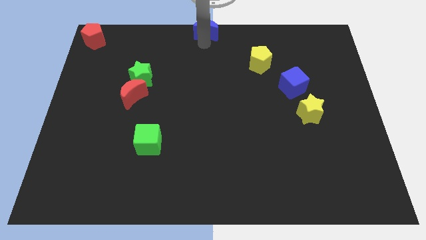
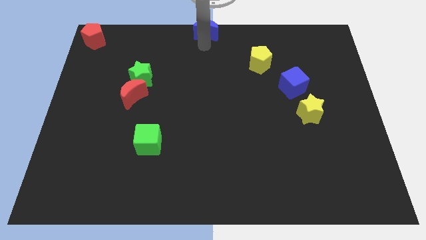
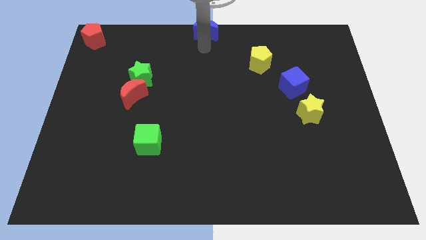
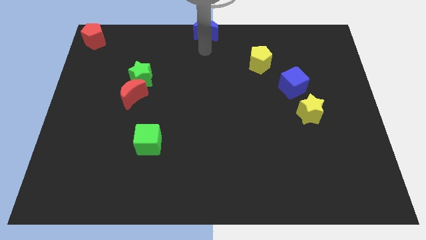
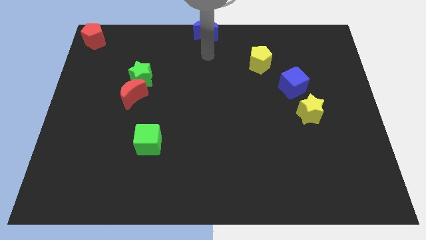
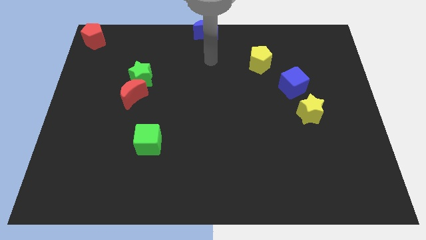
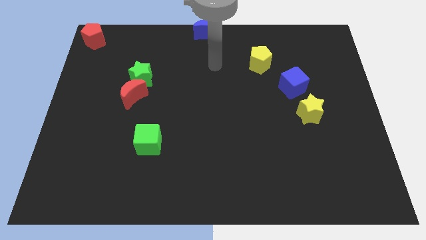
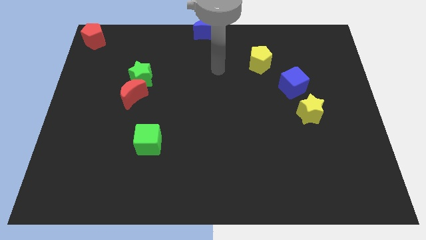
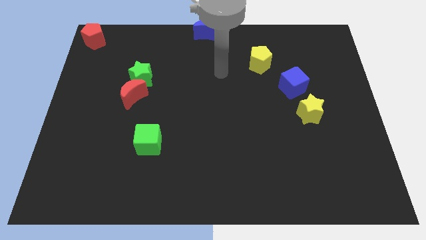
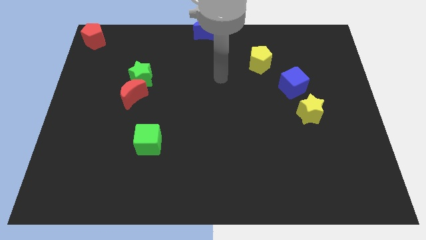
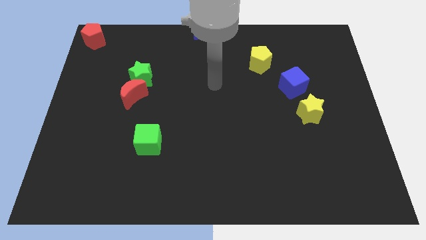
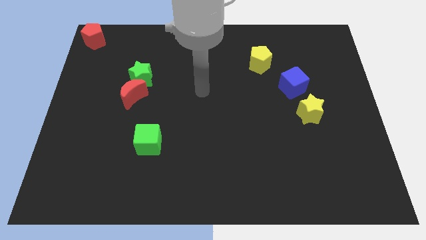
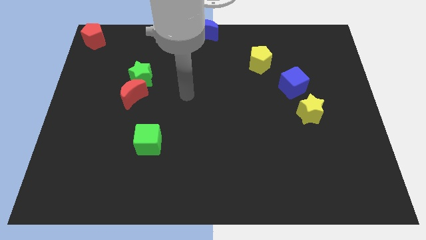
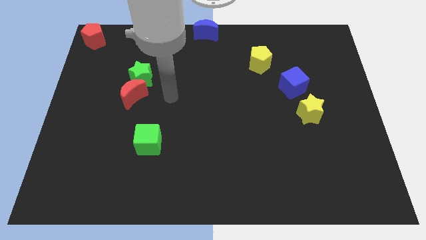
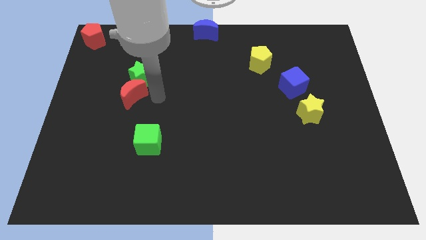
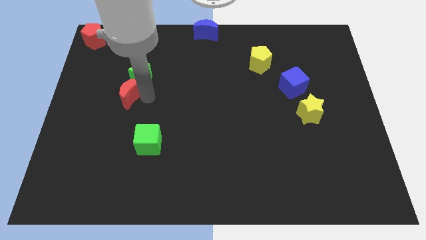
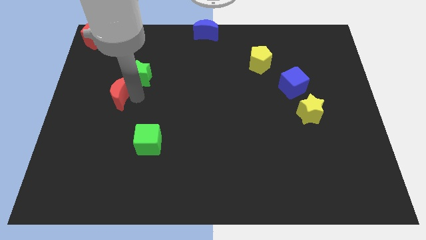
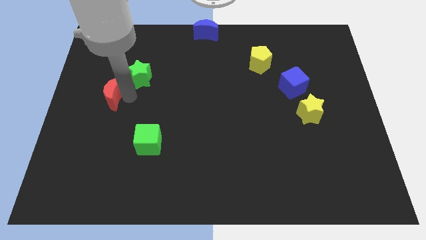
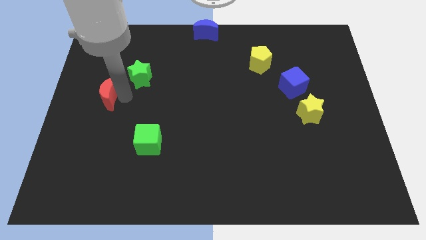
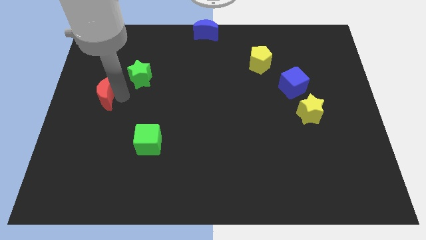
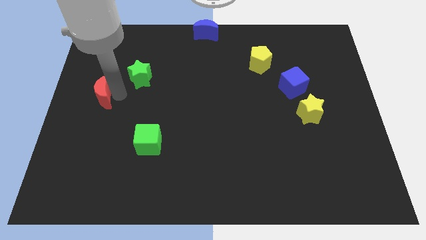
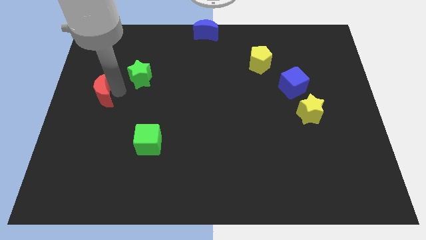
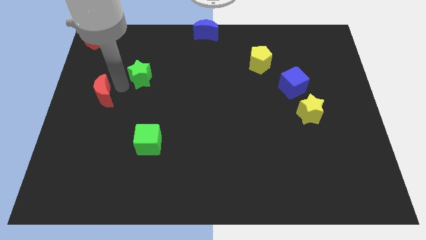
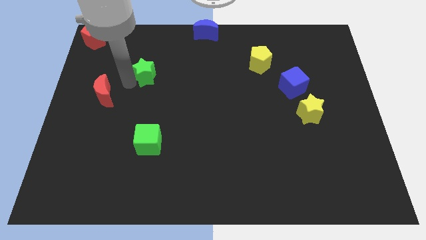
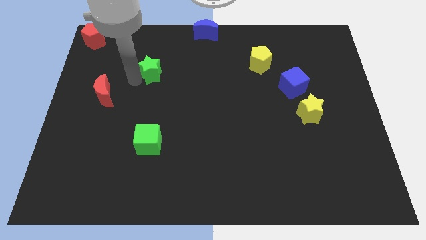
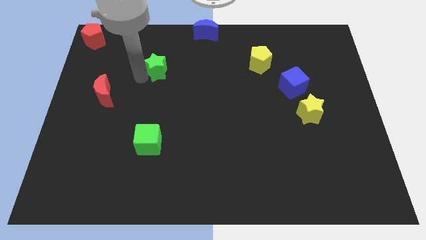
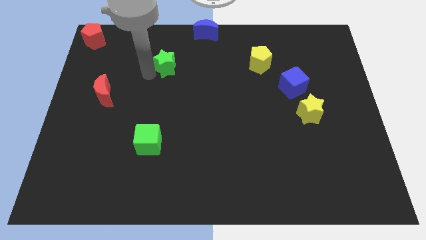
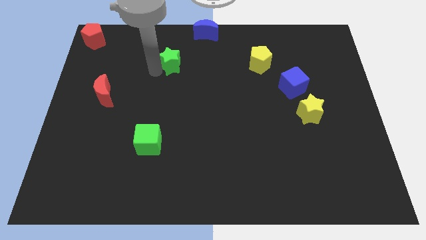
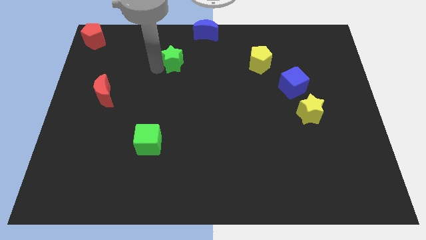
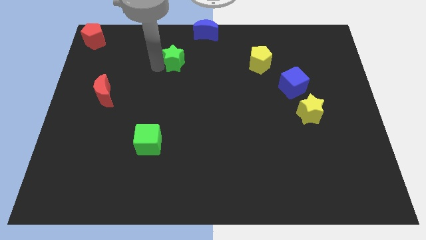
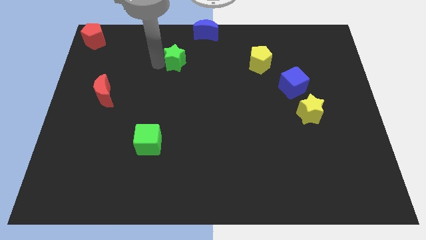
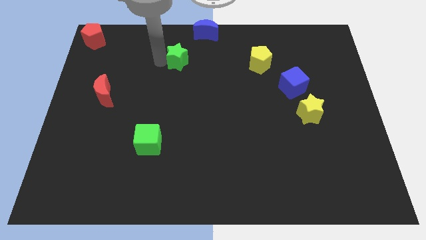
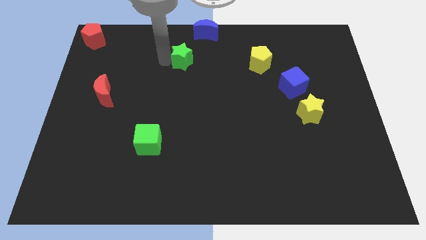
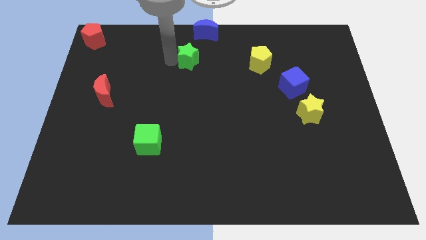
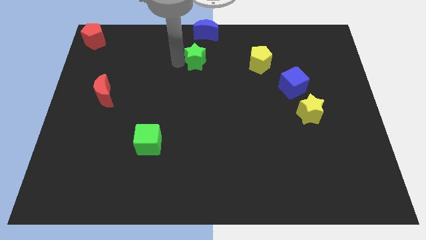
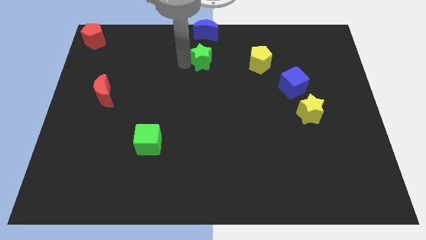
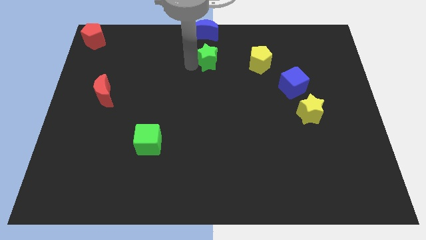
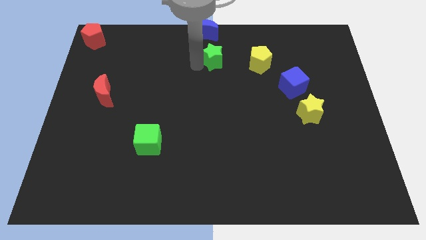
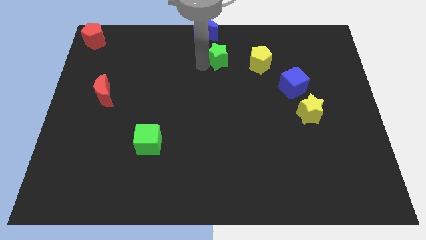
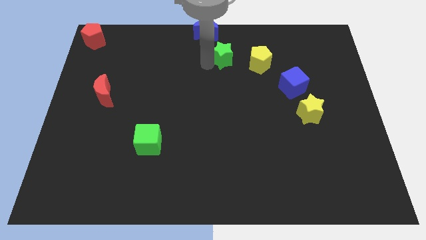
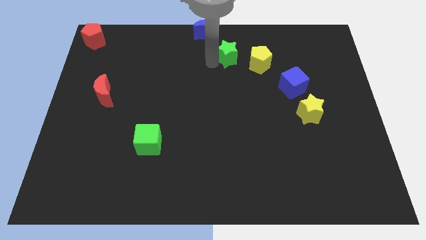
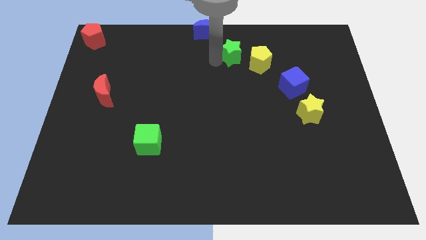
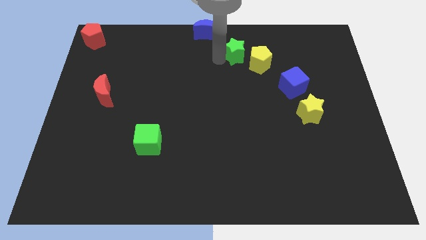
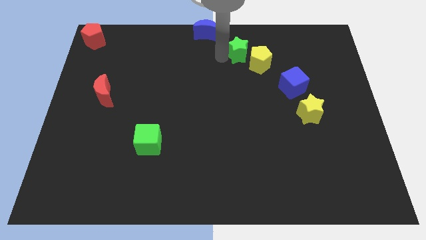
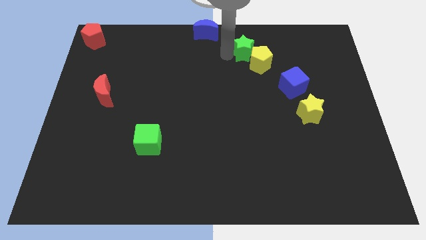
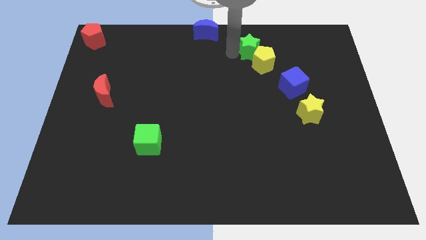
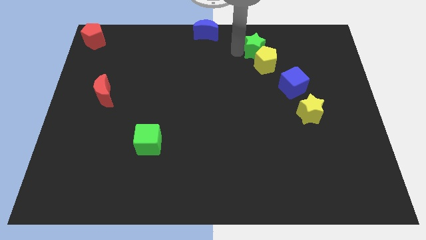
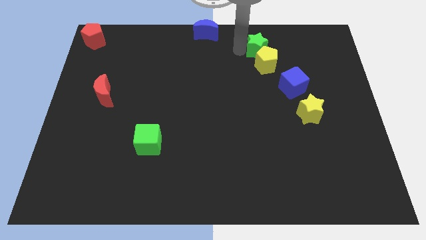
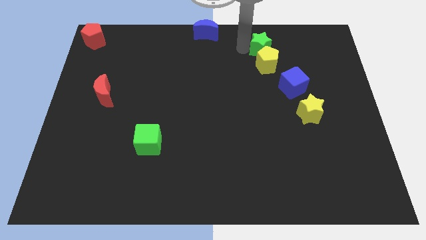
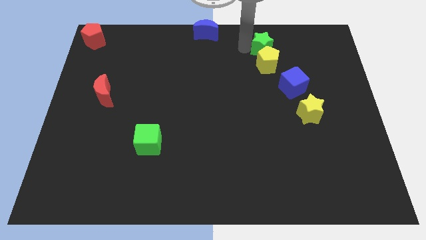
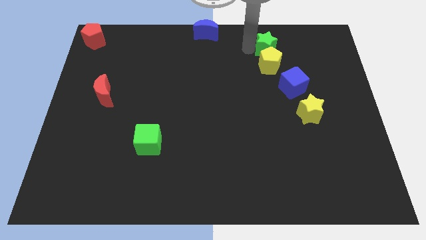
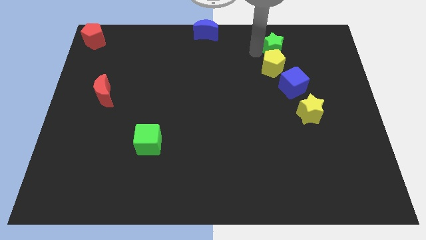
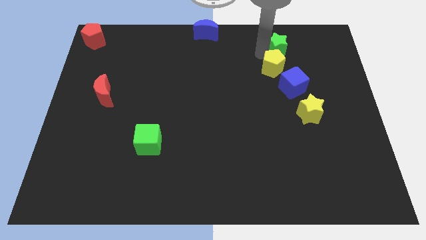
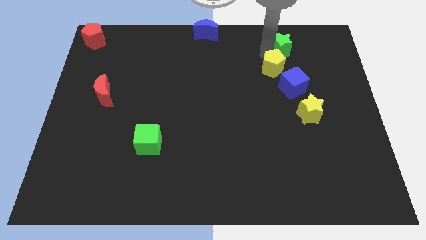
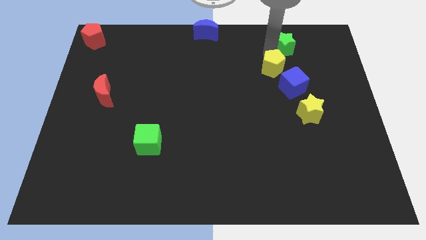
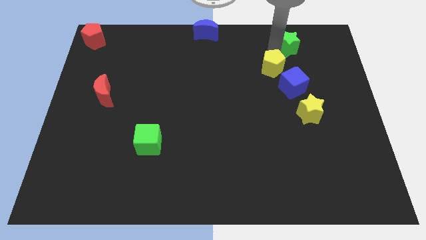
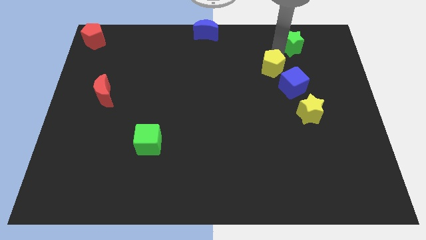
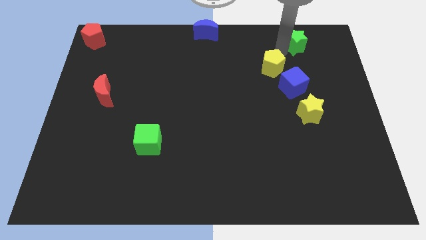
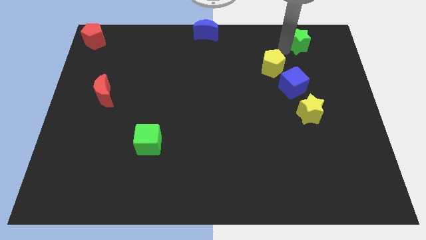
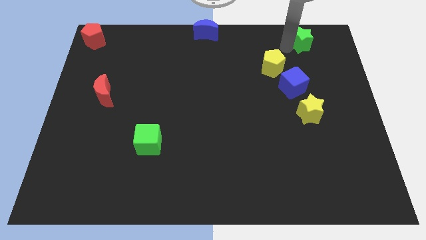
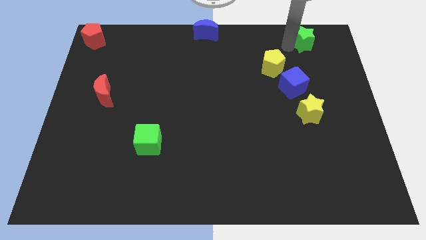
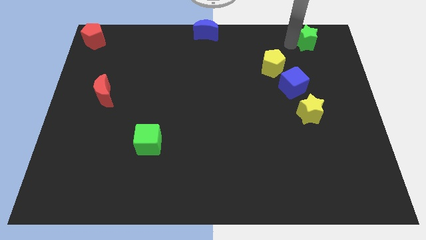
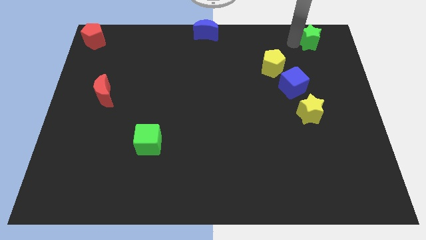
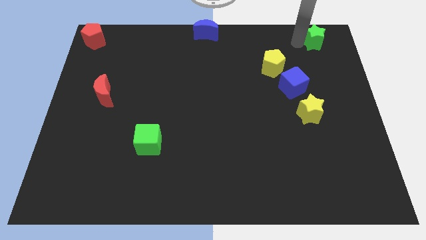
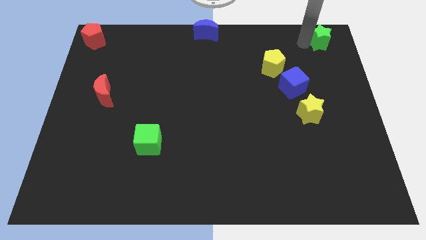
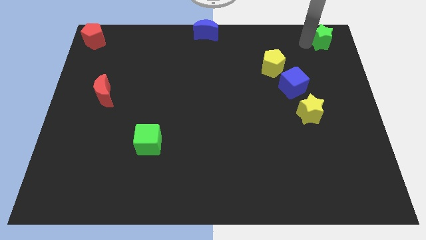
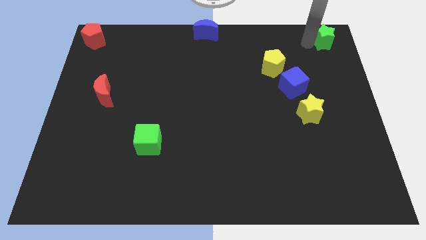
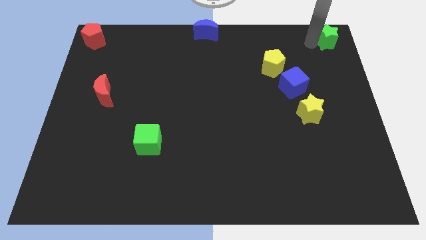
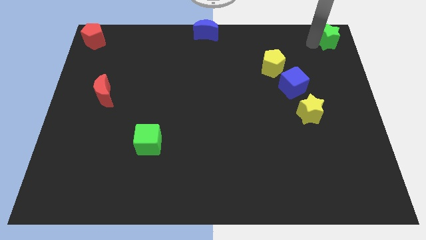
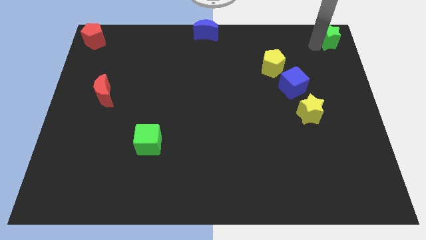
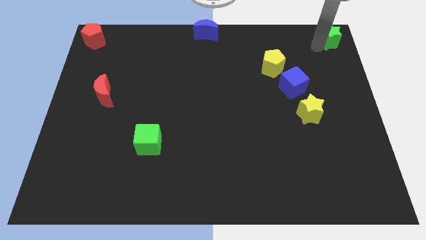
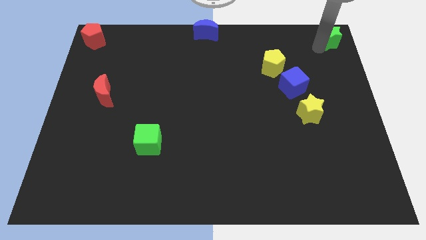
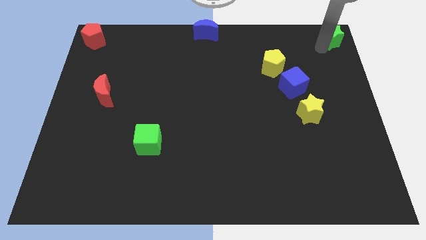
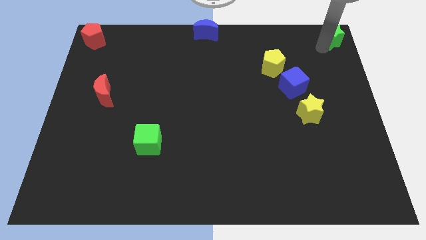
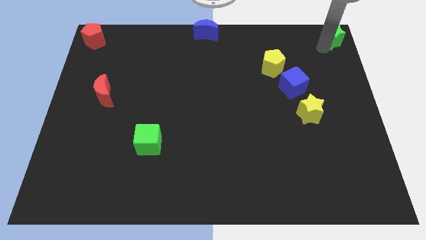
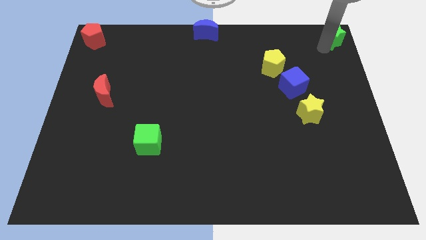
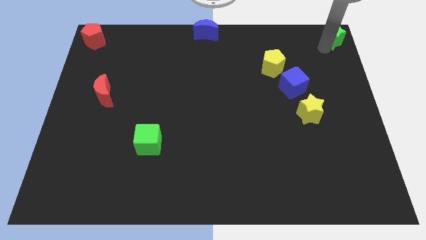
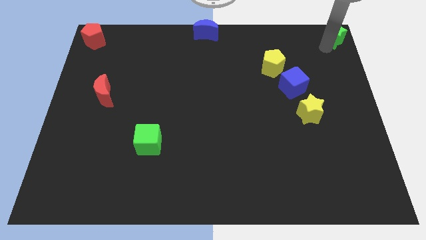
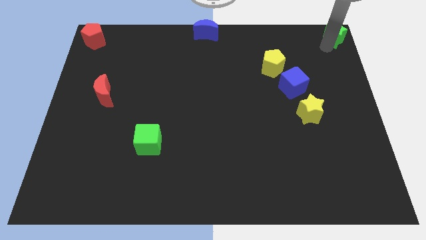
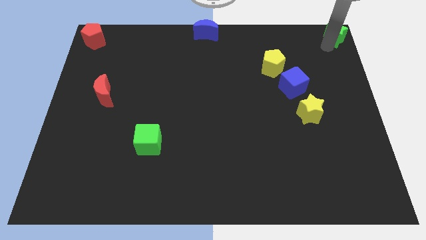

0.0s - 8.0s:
place the green star to the top right side of the board

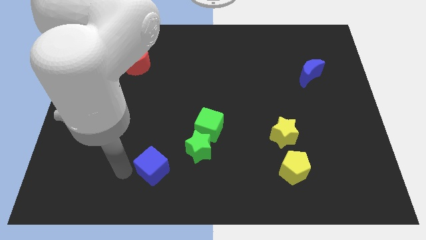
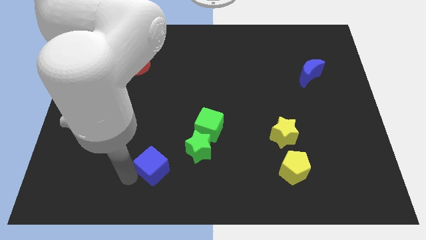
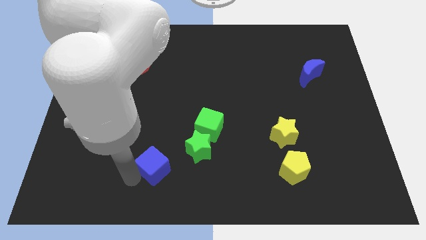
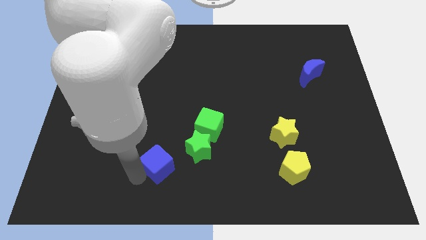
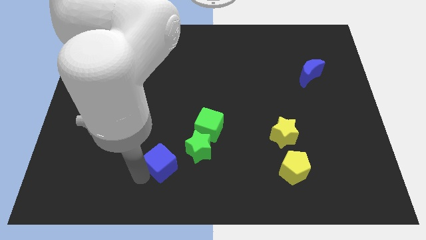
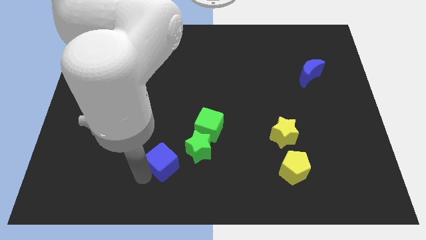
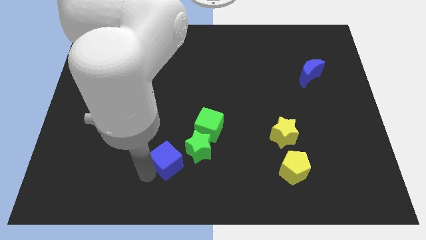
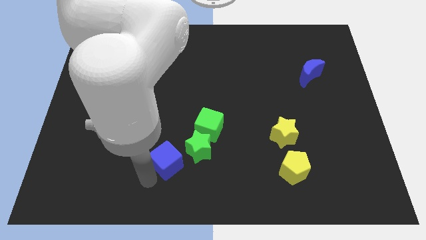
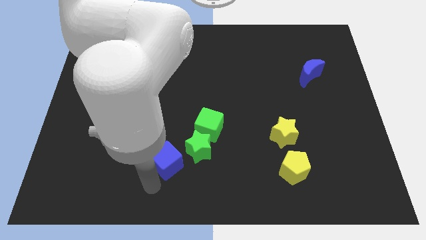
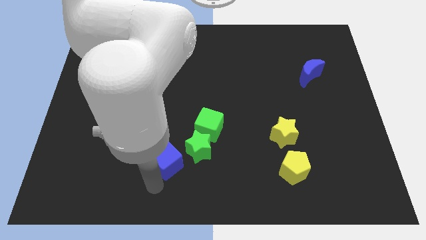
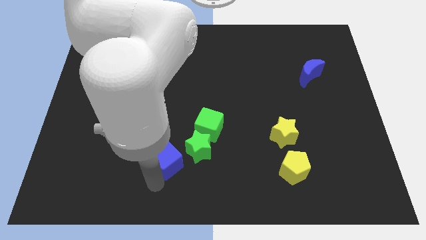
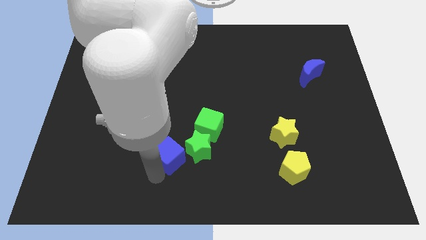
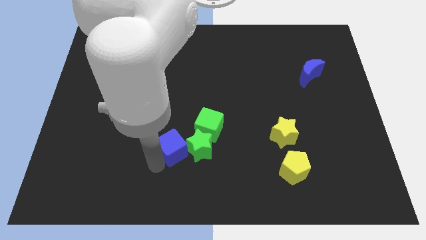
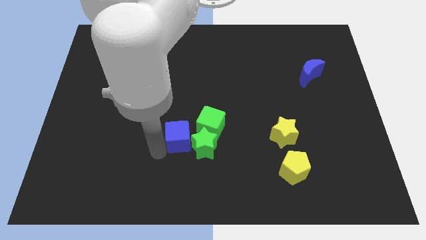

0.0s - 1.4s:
push the blue cube into the green star and green cube
